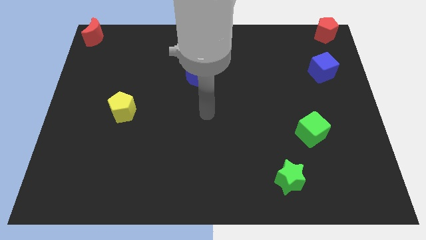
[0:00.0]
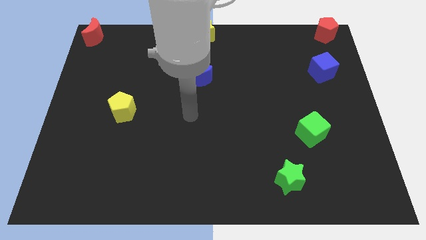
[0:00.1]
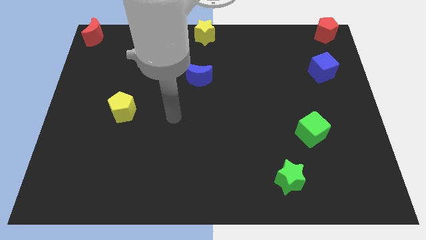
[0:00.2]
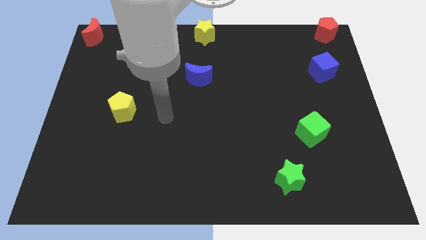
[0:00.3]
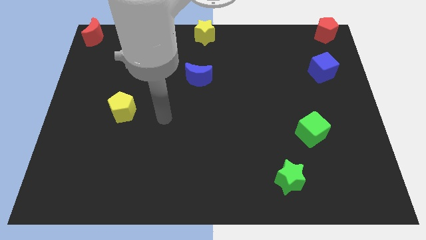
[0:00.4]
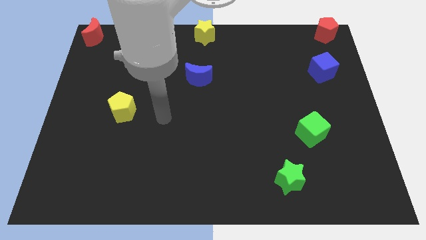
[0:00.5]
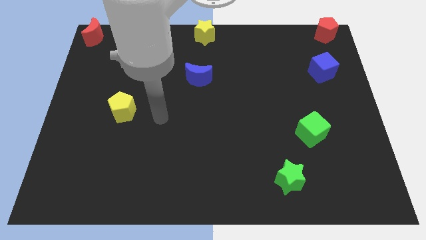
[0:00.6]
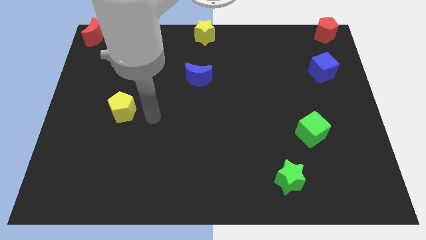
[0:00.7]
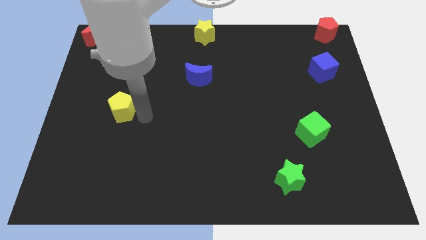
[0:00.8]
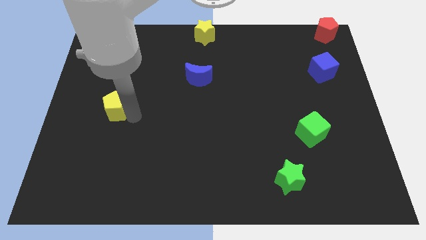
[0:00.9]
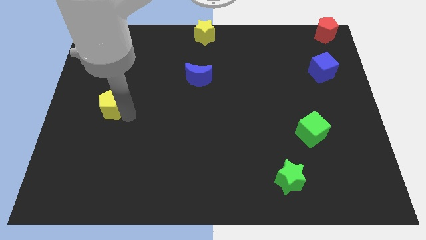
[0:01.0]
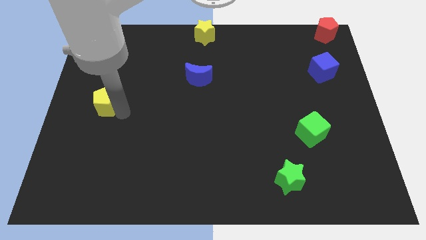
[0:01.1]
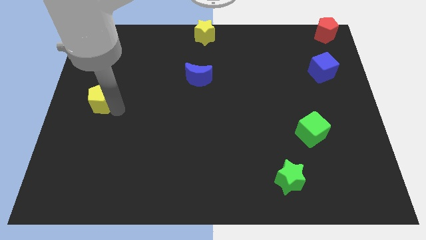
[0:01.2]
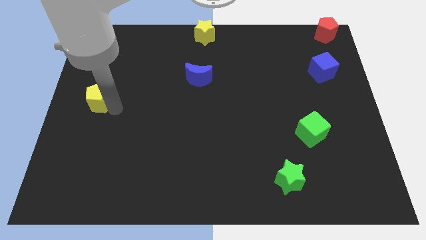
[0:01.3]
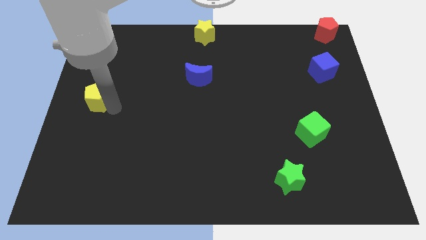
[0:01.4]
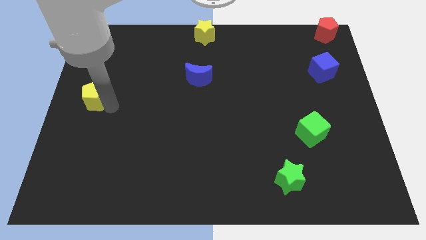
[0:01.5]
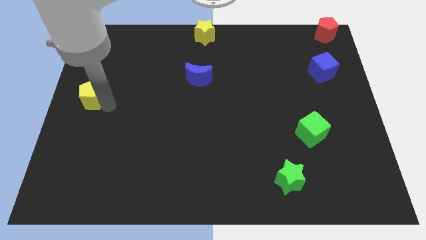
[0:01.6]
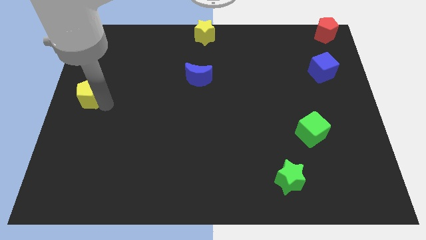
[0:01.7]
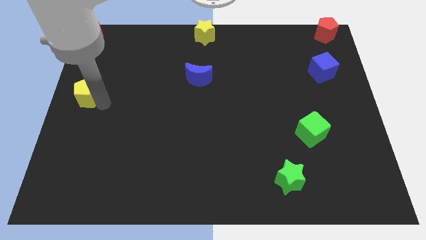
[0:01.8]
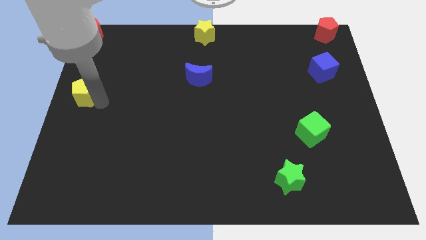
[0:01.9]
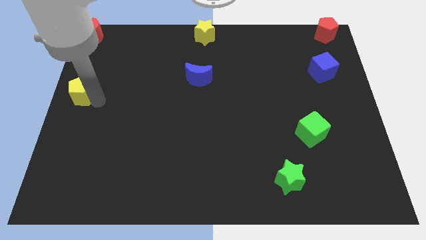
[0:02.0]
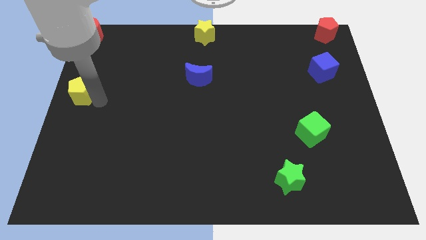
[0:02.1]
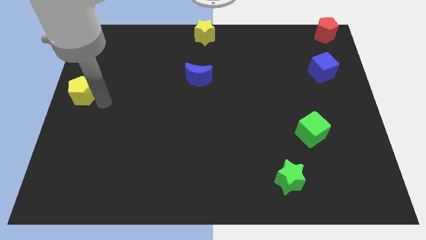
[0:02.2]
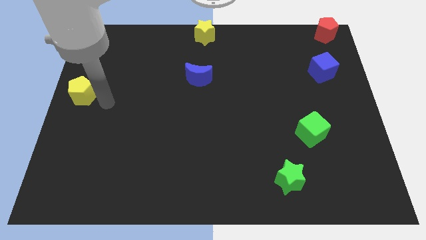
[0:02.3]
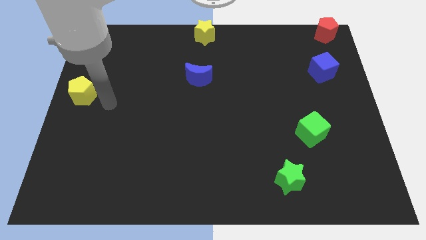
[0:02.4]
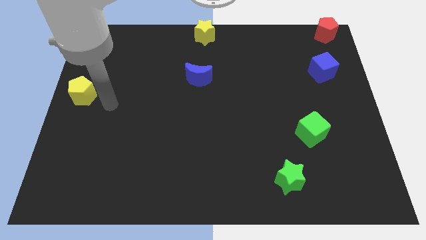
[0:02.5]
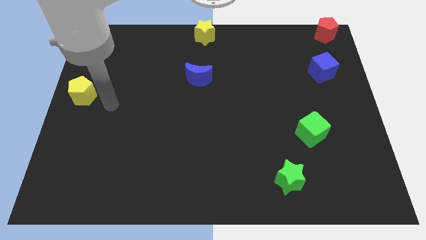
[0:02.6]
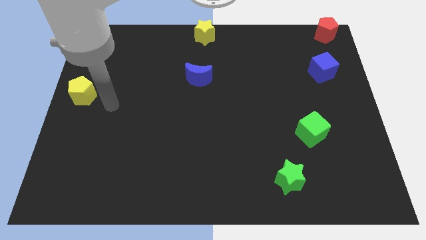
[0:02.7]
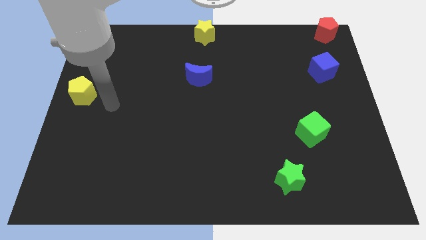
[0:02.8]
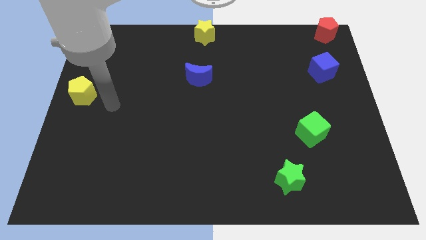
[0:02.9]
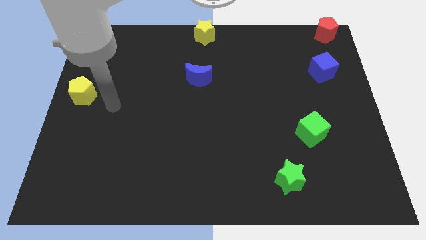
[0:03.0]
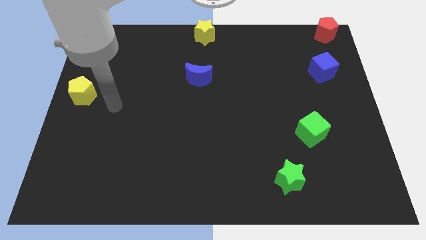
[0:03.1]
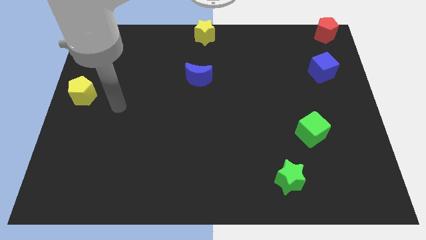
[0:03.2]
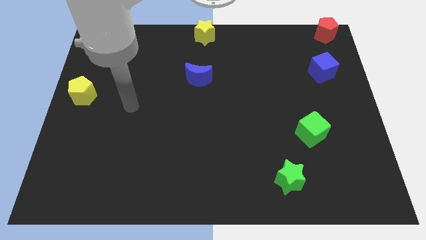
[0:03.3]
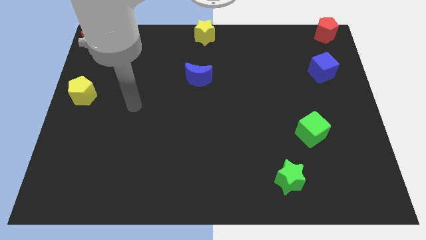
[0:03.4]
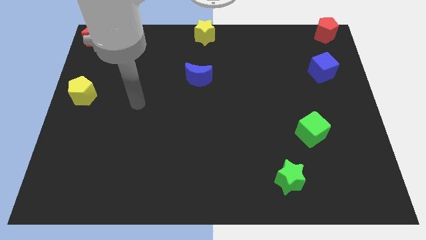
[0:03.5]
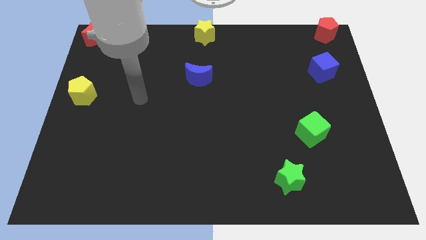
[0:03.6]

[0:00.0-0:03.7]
move the yellow pentagon vertically to the bottom side of the red moon

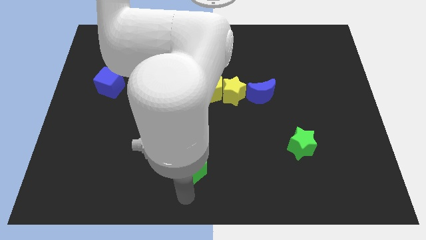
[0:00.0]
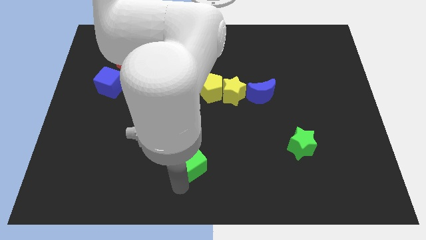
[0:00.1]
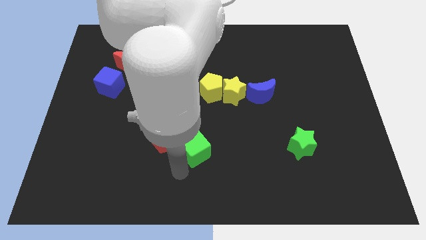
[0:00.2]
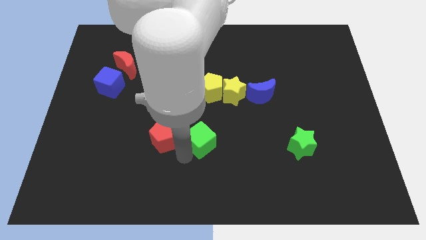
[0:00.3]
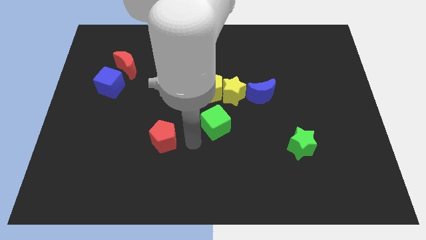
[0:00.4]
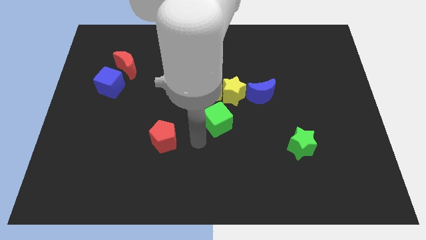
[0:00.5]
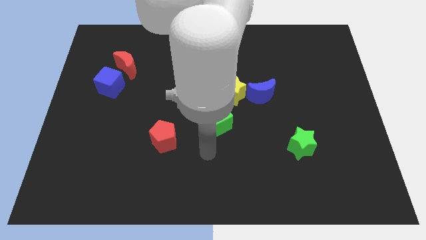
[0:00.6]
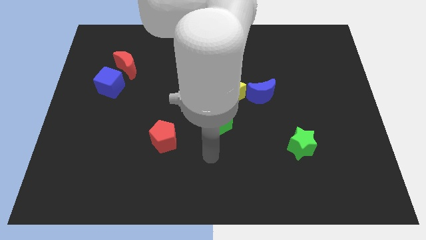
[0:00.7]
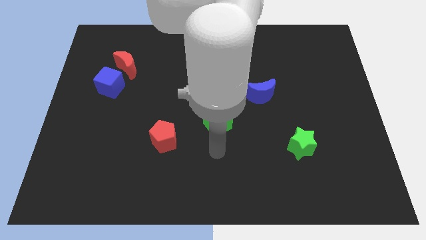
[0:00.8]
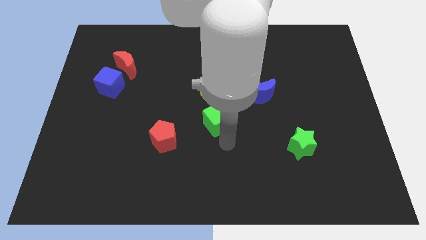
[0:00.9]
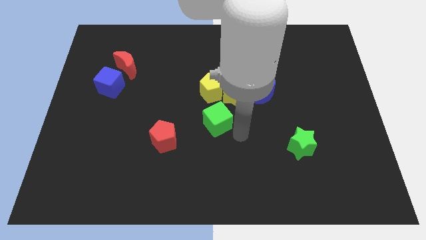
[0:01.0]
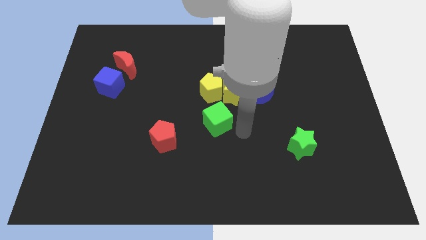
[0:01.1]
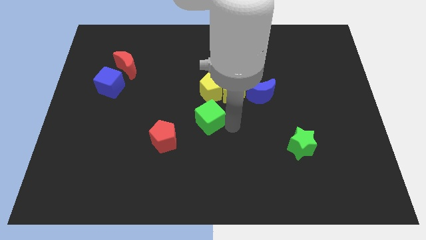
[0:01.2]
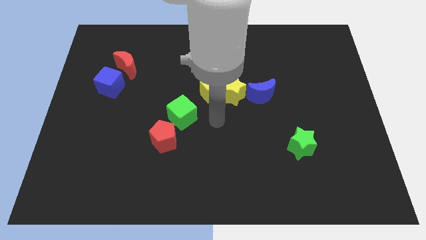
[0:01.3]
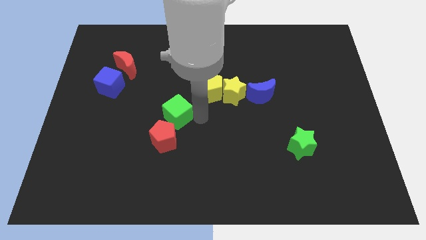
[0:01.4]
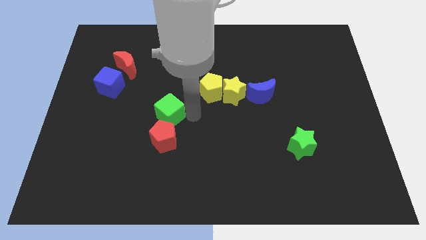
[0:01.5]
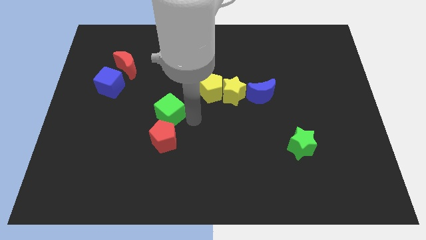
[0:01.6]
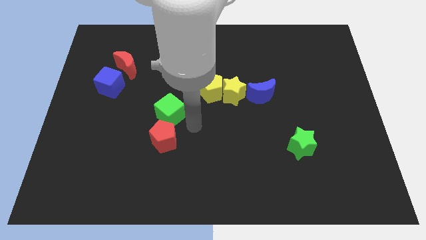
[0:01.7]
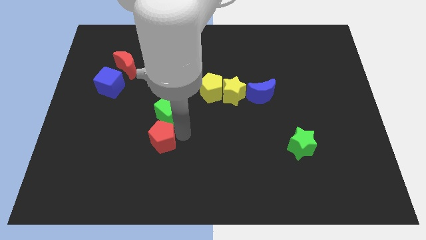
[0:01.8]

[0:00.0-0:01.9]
place the green cube above the red pentagon

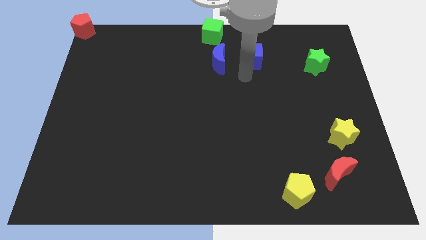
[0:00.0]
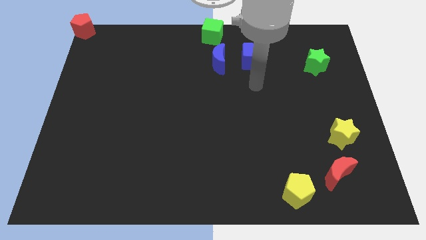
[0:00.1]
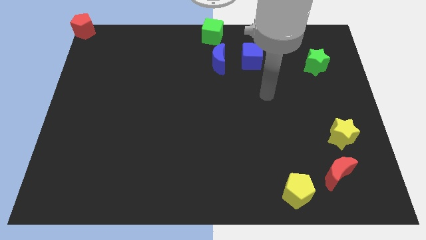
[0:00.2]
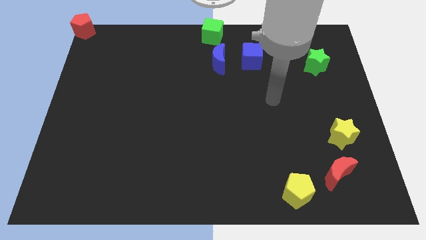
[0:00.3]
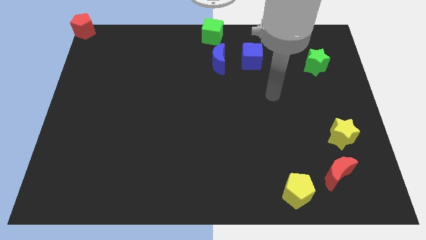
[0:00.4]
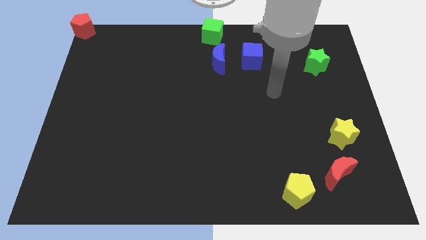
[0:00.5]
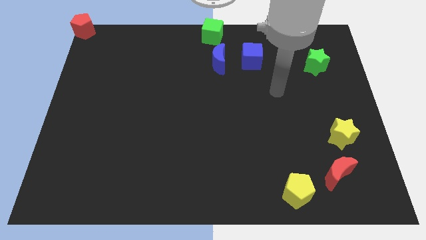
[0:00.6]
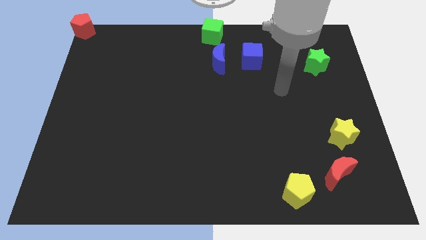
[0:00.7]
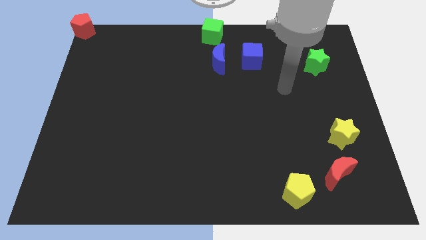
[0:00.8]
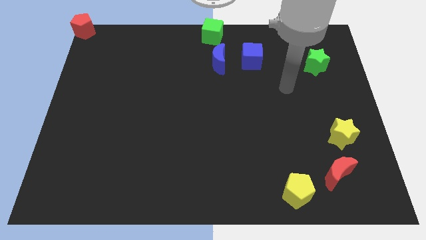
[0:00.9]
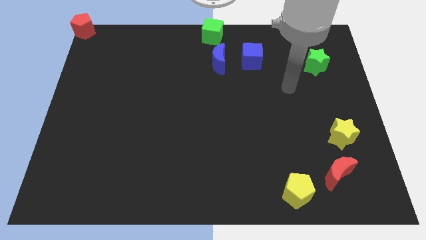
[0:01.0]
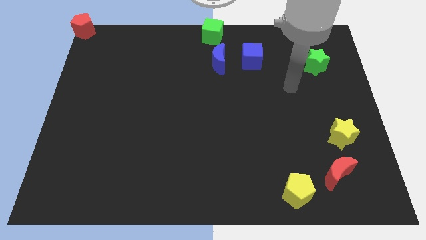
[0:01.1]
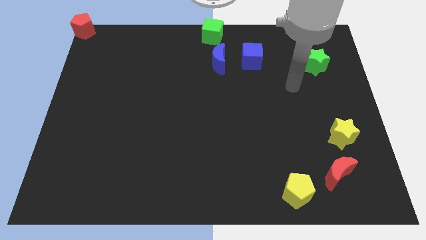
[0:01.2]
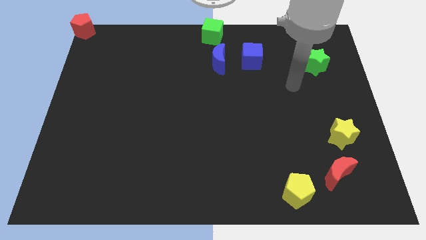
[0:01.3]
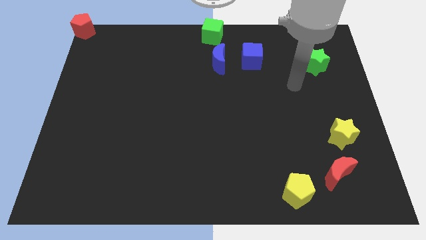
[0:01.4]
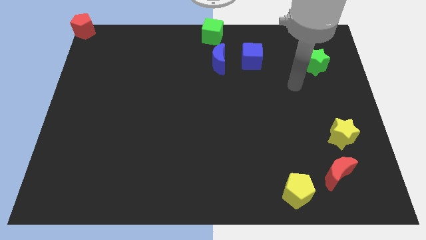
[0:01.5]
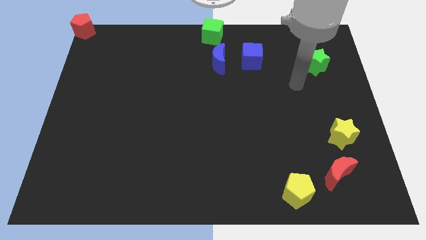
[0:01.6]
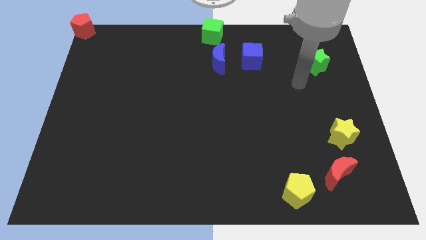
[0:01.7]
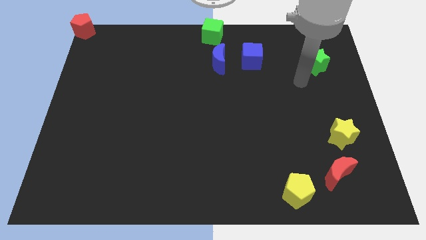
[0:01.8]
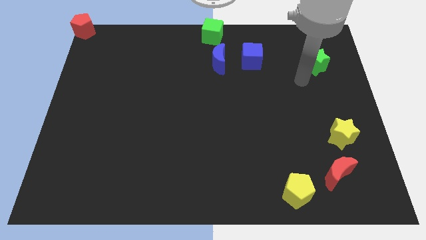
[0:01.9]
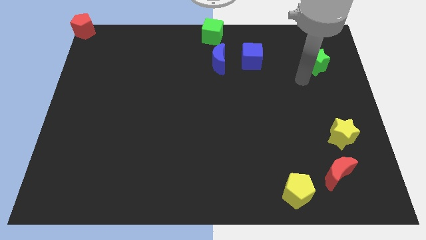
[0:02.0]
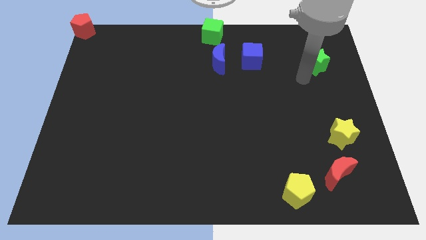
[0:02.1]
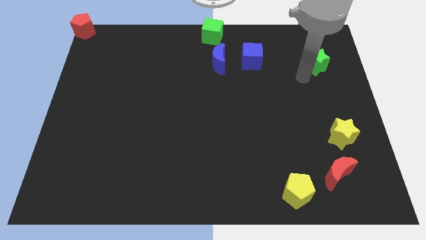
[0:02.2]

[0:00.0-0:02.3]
place your arm to the bottom left of the green star

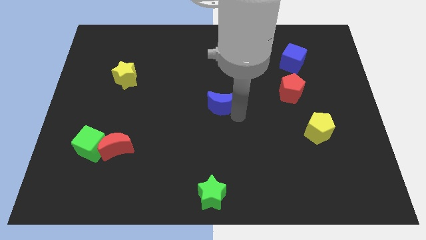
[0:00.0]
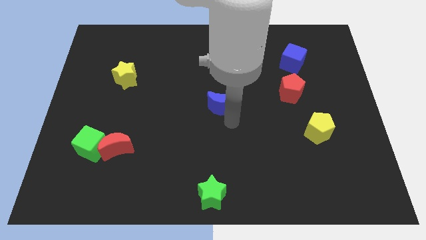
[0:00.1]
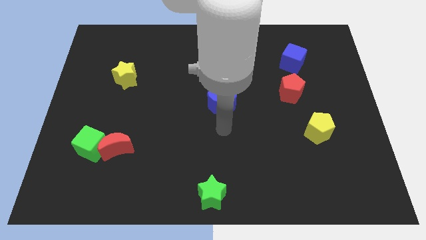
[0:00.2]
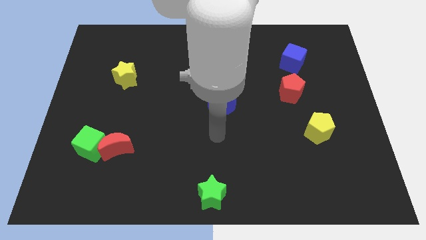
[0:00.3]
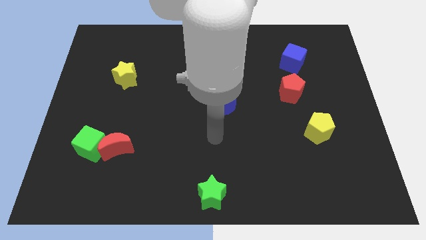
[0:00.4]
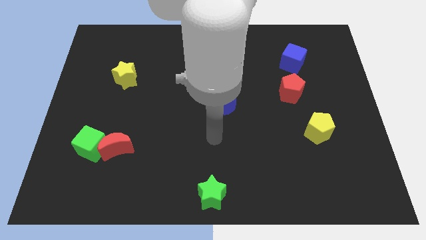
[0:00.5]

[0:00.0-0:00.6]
place your arm in between blue moon and green star

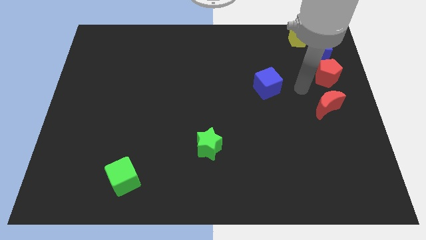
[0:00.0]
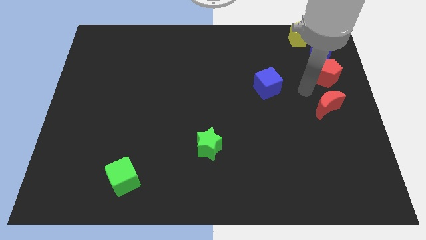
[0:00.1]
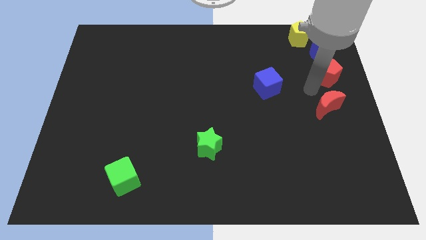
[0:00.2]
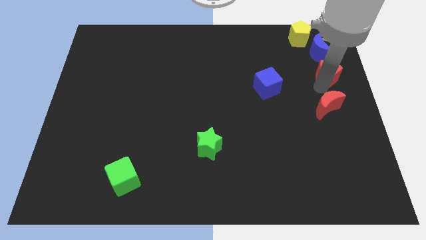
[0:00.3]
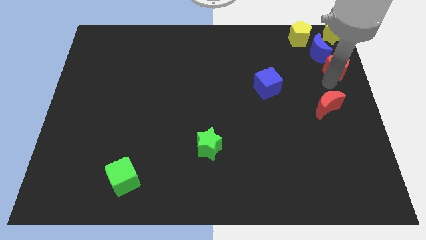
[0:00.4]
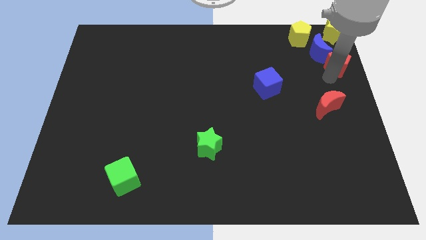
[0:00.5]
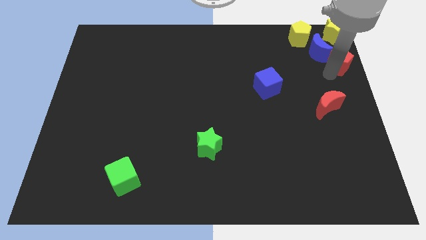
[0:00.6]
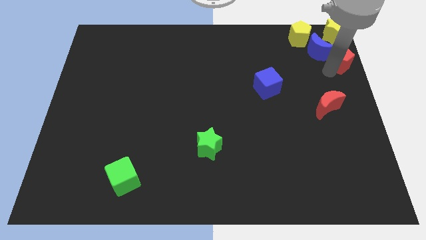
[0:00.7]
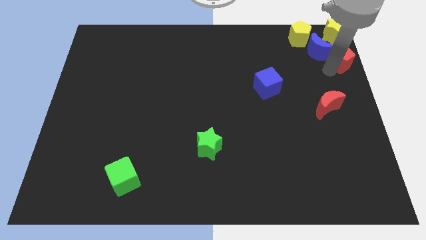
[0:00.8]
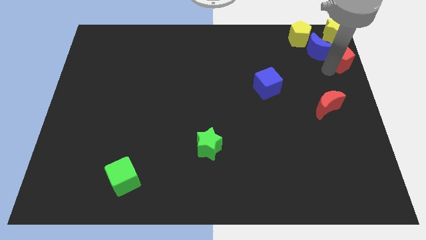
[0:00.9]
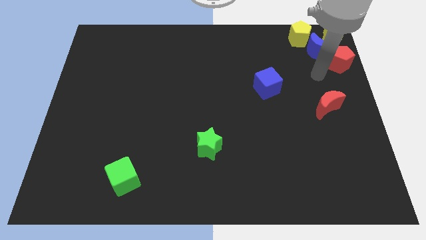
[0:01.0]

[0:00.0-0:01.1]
make the red pentagon to touch the bottom side of the blue crescent
